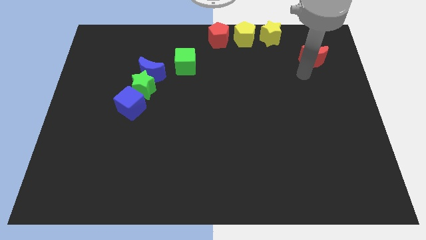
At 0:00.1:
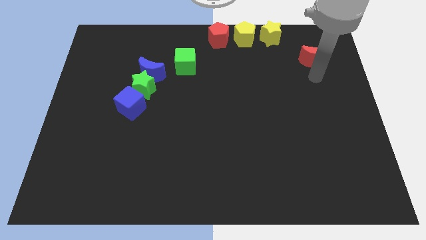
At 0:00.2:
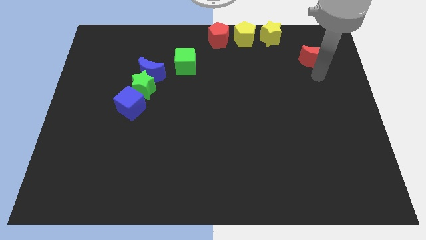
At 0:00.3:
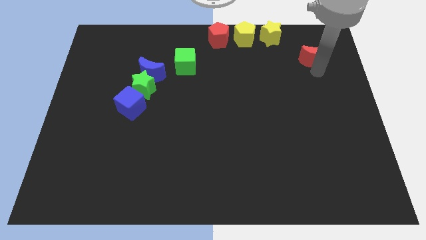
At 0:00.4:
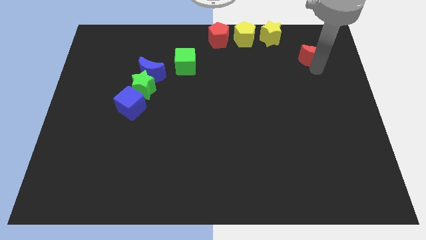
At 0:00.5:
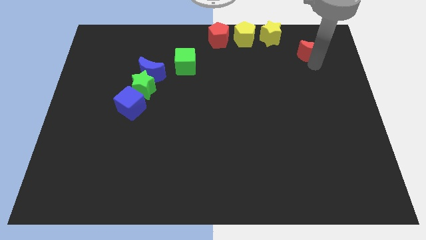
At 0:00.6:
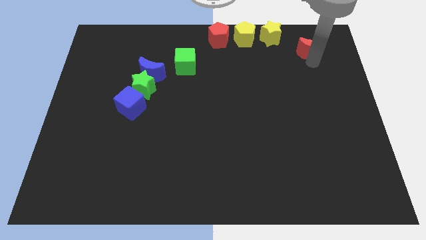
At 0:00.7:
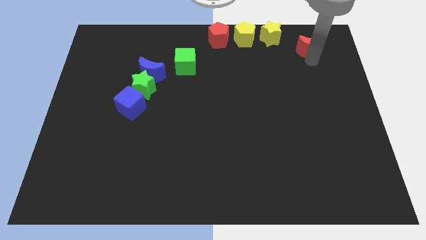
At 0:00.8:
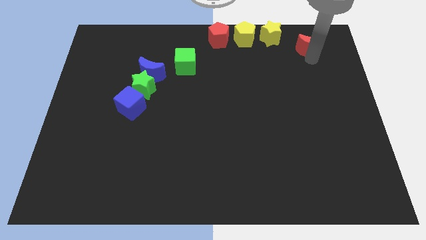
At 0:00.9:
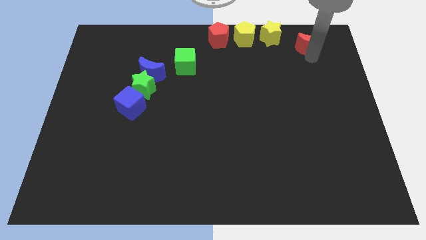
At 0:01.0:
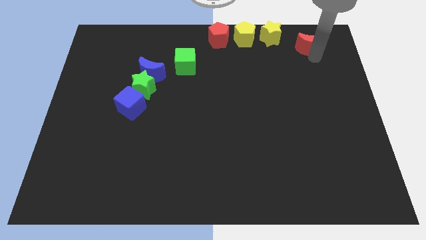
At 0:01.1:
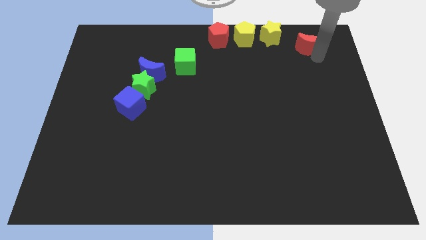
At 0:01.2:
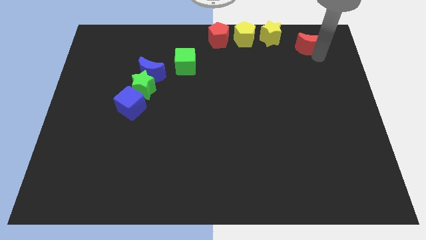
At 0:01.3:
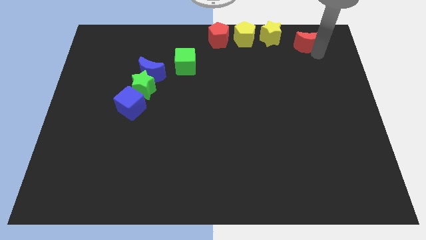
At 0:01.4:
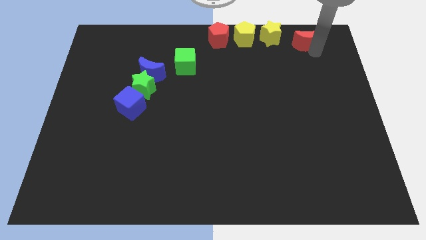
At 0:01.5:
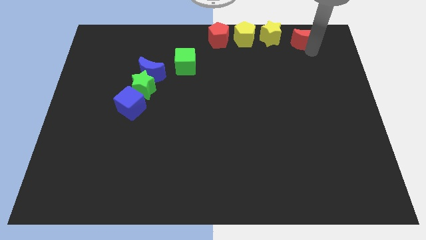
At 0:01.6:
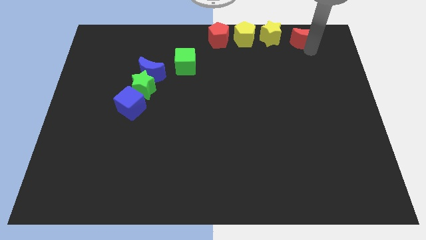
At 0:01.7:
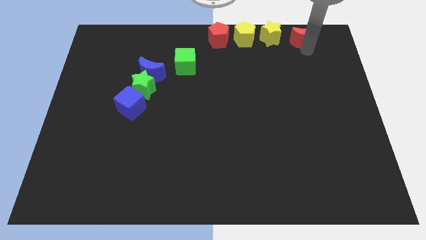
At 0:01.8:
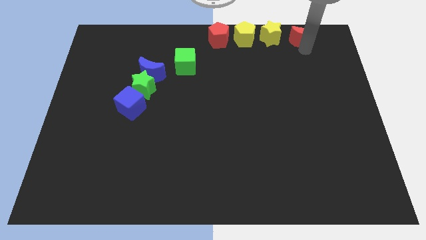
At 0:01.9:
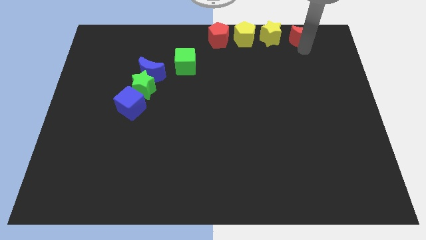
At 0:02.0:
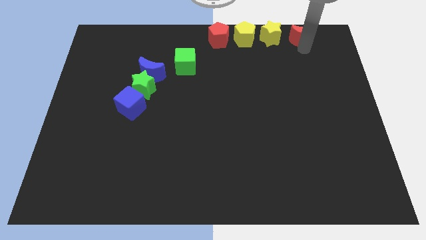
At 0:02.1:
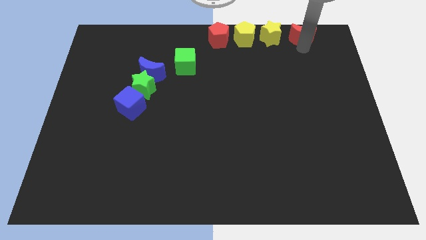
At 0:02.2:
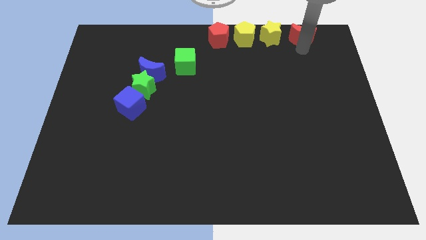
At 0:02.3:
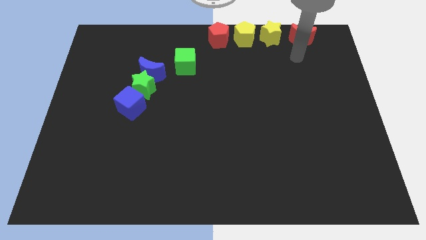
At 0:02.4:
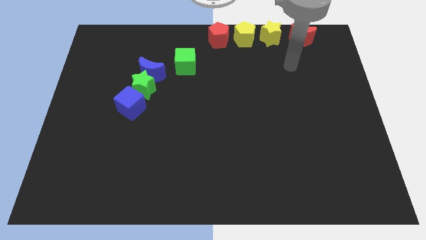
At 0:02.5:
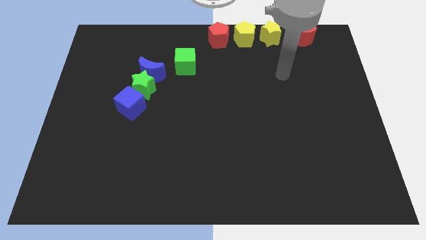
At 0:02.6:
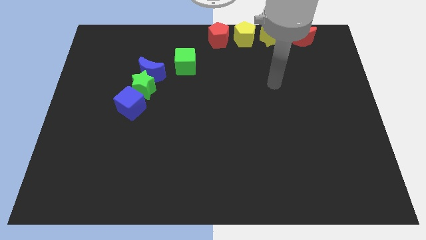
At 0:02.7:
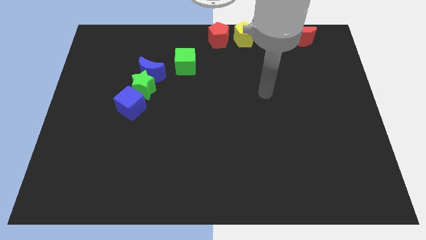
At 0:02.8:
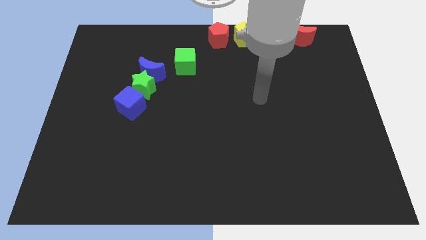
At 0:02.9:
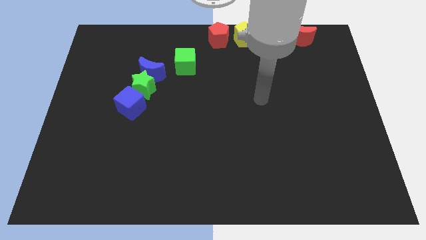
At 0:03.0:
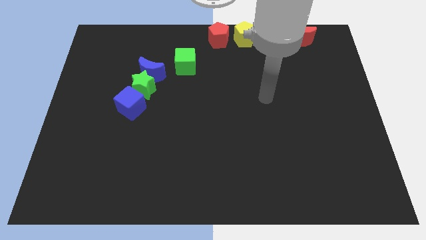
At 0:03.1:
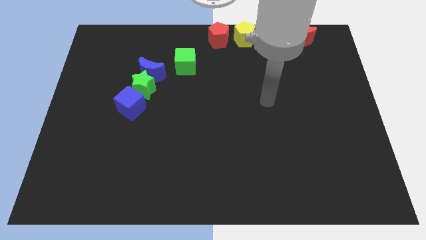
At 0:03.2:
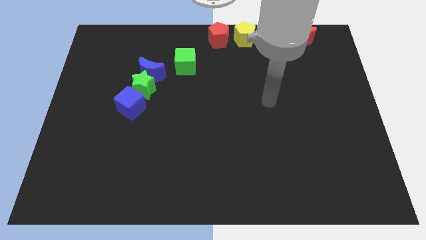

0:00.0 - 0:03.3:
place the red crescent to the right side of the yellow star

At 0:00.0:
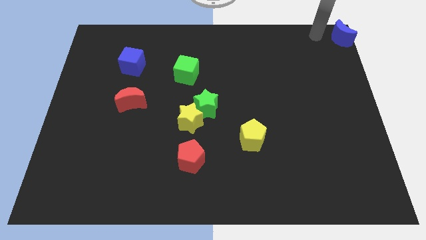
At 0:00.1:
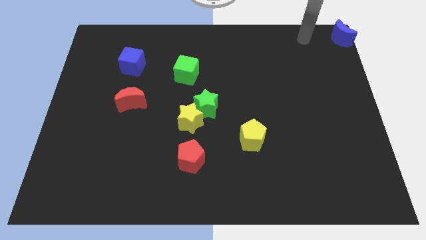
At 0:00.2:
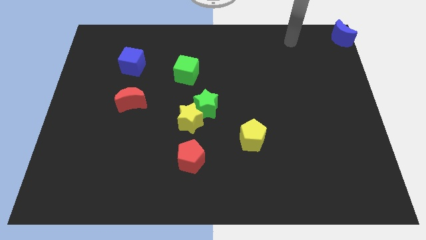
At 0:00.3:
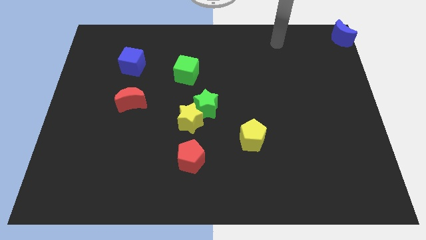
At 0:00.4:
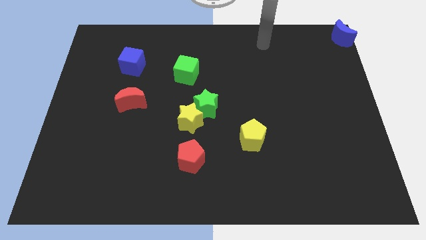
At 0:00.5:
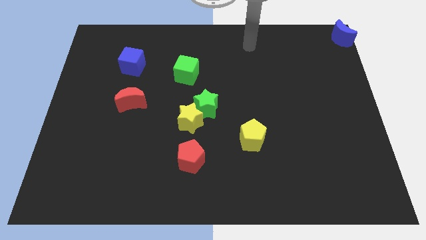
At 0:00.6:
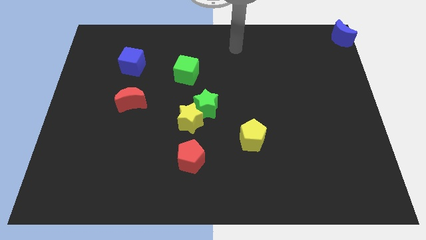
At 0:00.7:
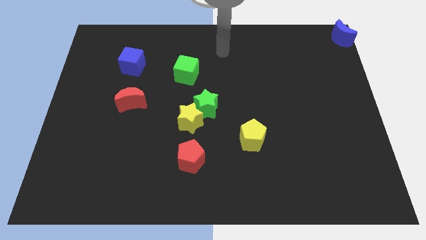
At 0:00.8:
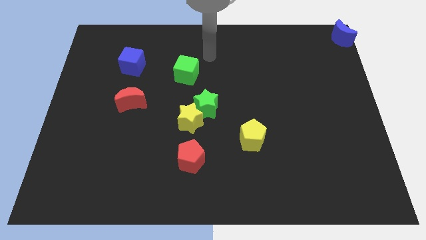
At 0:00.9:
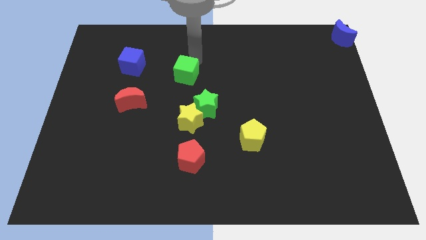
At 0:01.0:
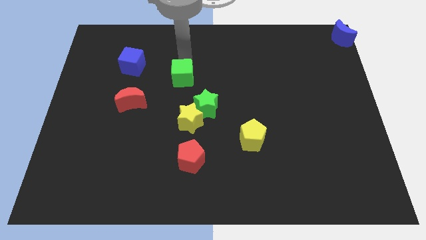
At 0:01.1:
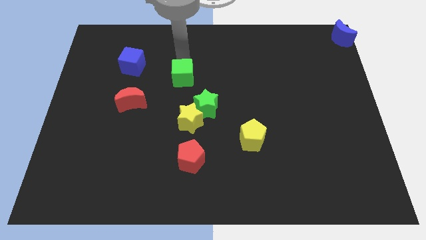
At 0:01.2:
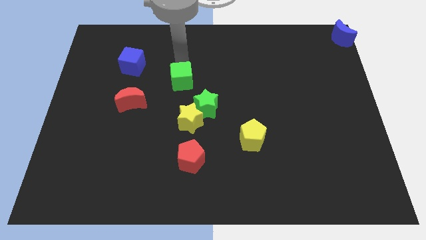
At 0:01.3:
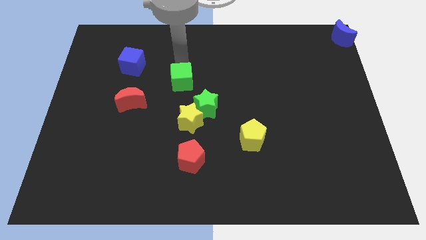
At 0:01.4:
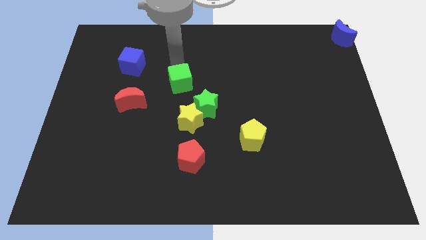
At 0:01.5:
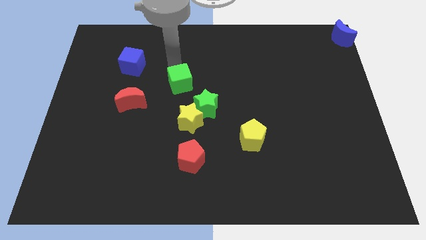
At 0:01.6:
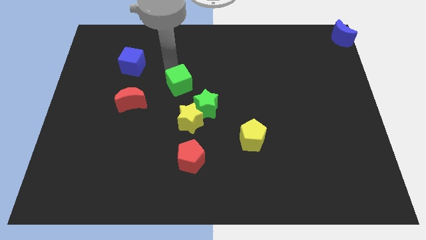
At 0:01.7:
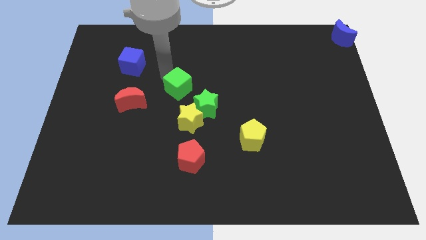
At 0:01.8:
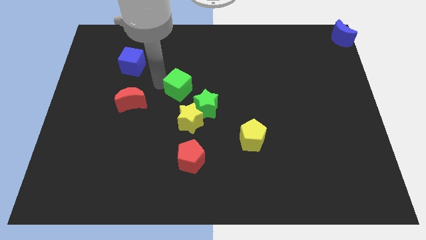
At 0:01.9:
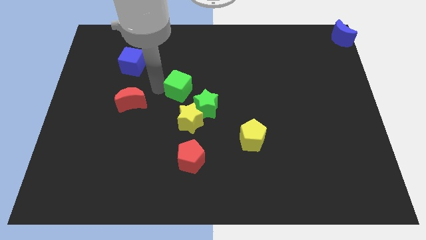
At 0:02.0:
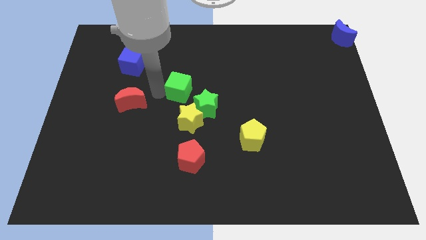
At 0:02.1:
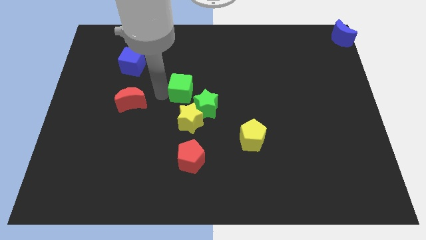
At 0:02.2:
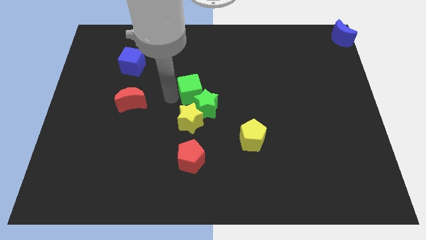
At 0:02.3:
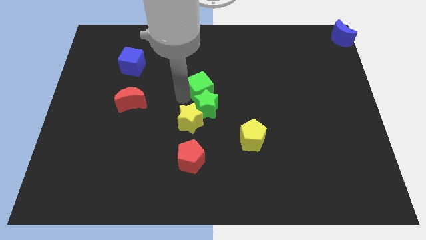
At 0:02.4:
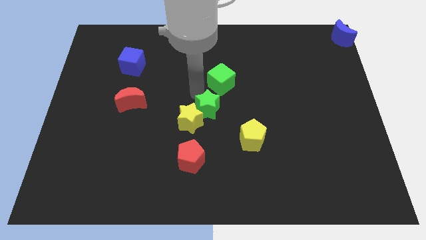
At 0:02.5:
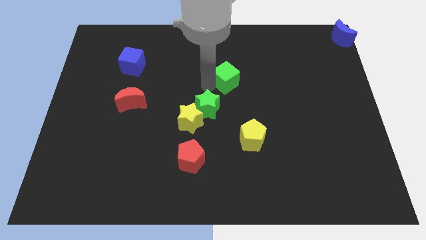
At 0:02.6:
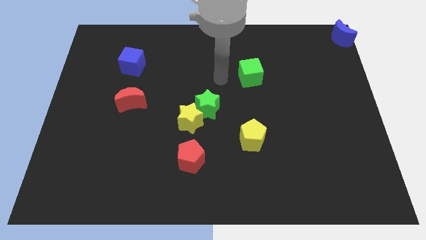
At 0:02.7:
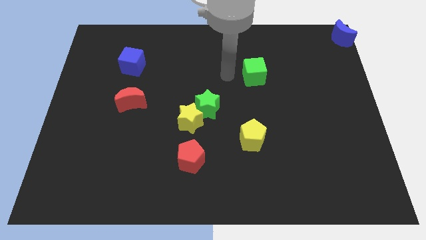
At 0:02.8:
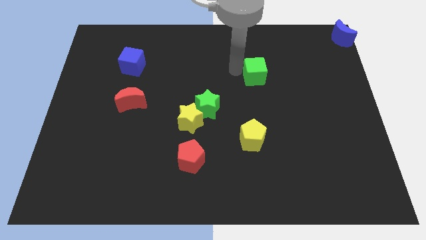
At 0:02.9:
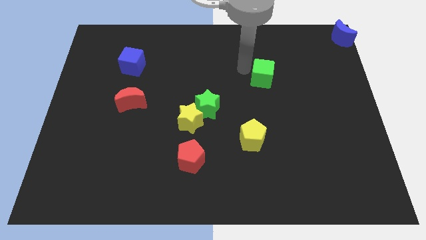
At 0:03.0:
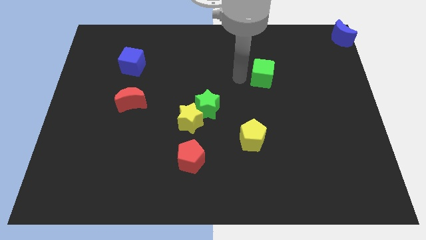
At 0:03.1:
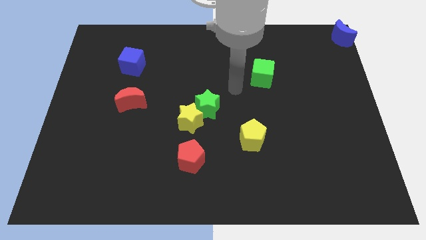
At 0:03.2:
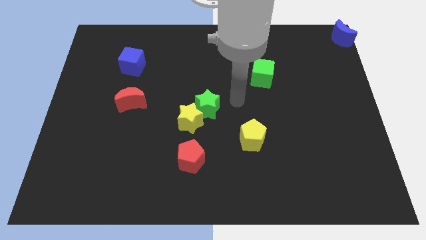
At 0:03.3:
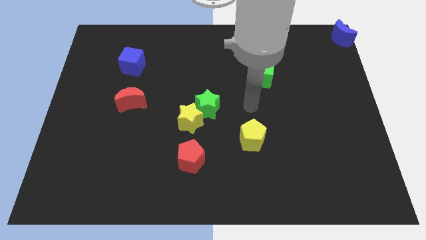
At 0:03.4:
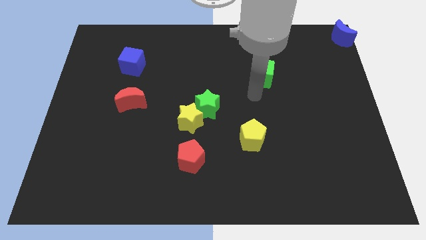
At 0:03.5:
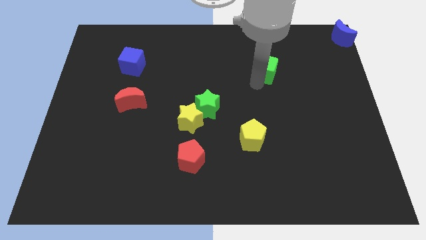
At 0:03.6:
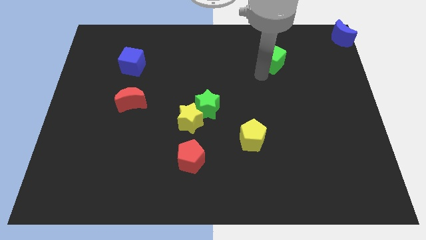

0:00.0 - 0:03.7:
move green cube diagonally on the top right side of the yellow pentagon

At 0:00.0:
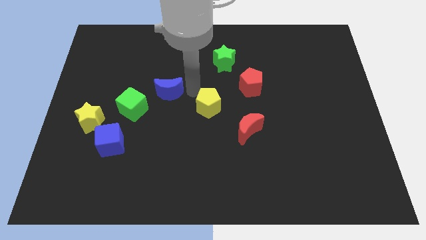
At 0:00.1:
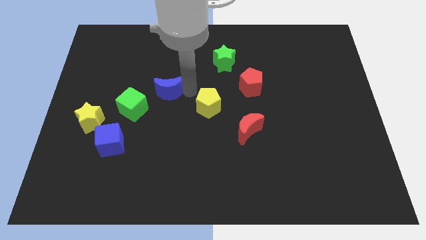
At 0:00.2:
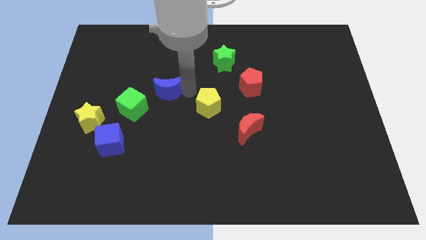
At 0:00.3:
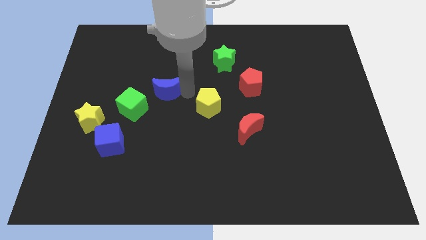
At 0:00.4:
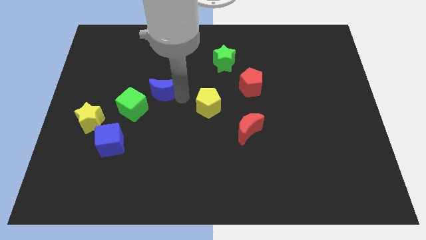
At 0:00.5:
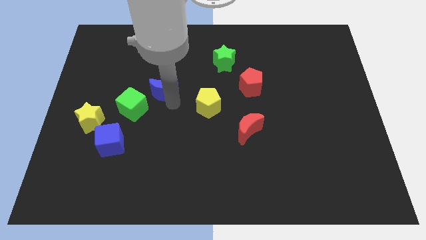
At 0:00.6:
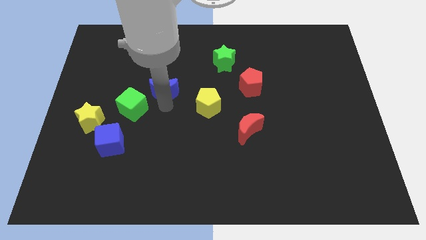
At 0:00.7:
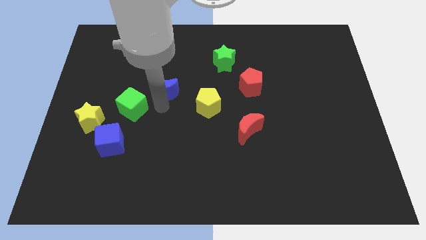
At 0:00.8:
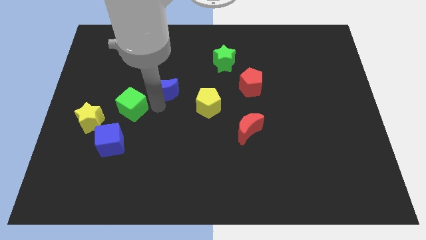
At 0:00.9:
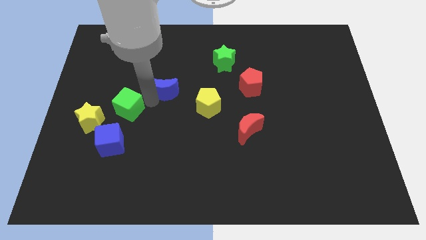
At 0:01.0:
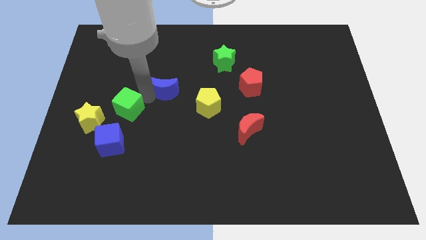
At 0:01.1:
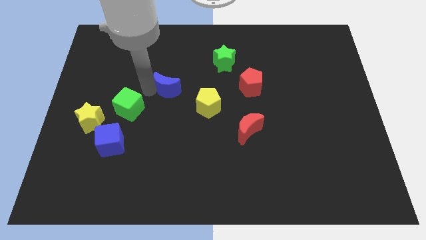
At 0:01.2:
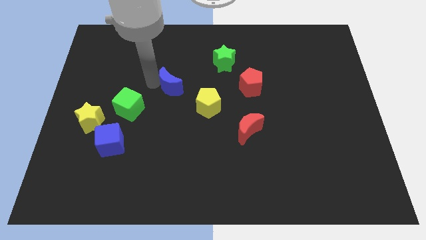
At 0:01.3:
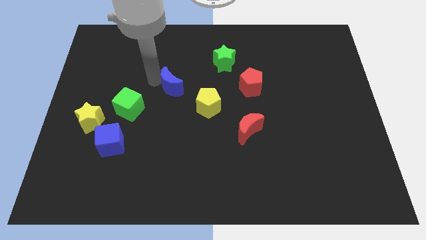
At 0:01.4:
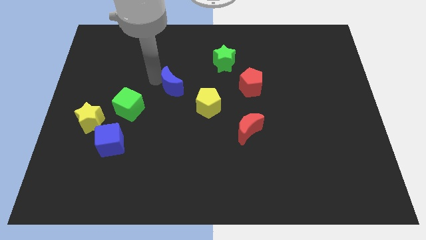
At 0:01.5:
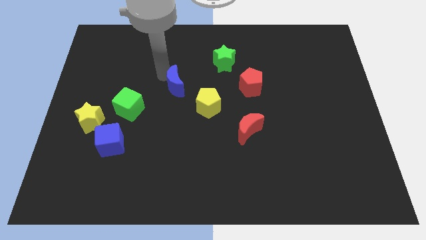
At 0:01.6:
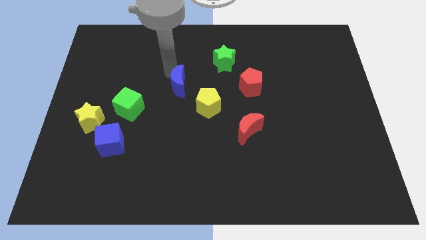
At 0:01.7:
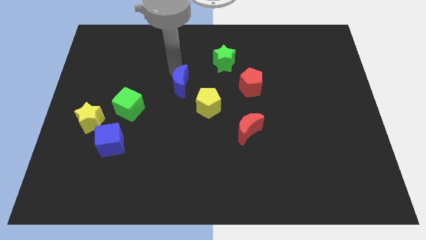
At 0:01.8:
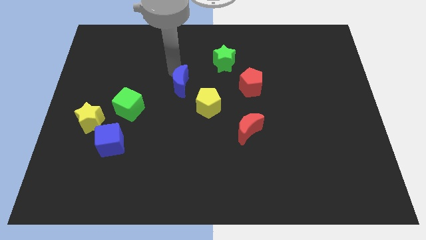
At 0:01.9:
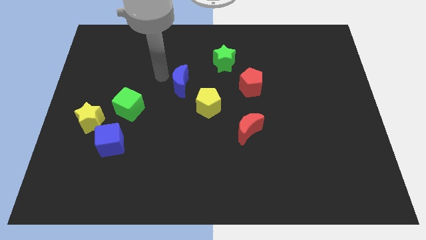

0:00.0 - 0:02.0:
separate the blue crescent and the green cube
